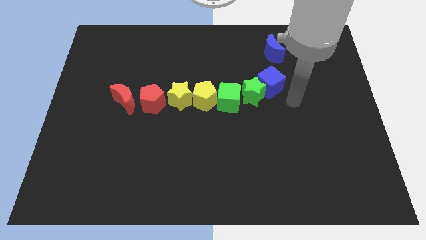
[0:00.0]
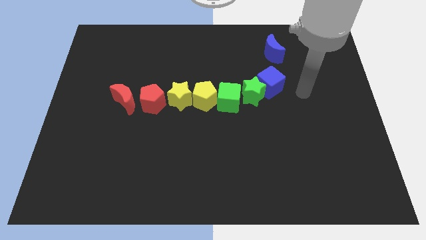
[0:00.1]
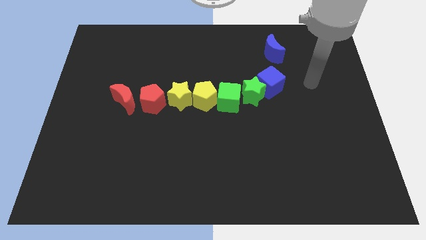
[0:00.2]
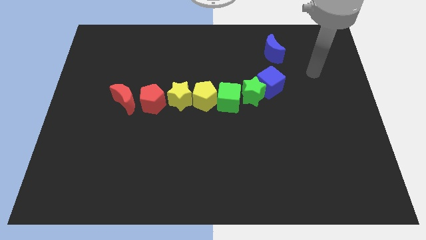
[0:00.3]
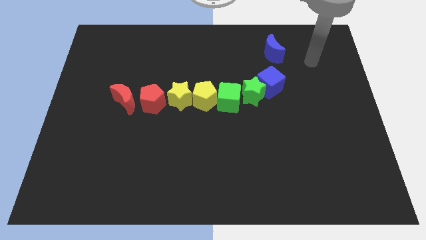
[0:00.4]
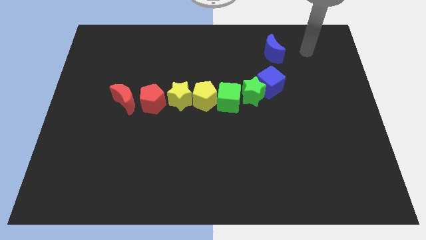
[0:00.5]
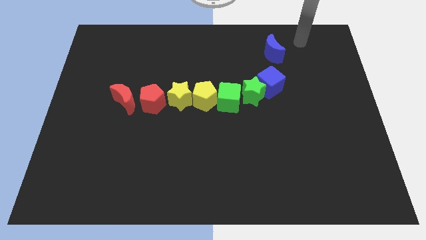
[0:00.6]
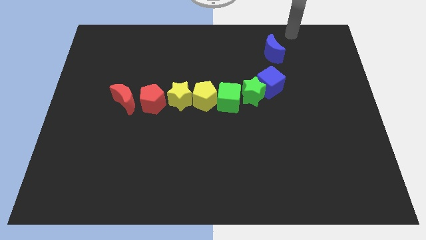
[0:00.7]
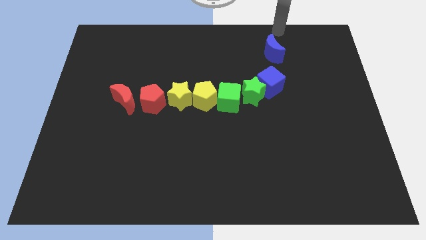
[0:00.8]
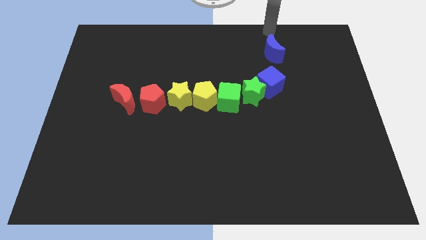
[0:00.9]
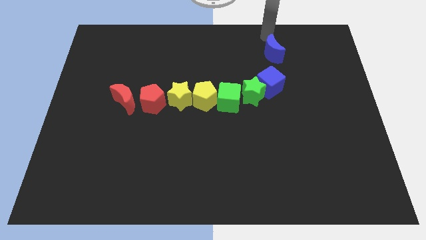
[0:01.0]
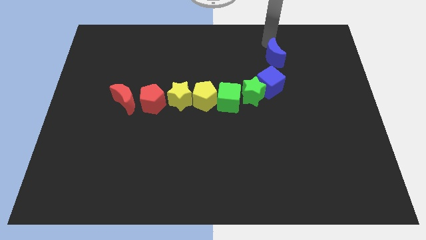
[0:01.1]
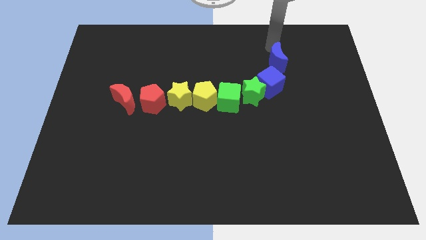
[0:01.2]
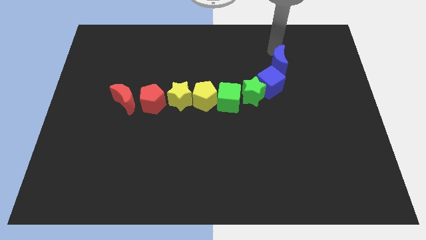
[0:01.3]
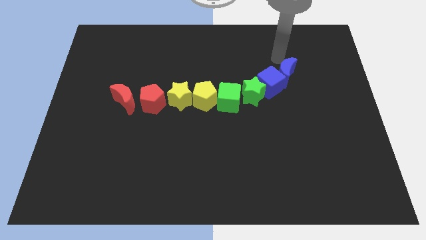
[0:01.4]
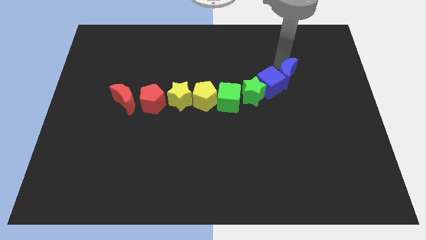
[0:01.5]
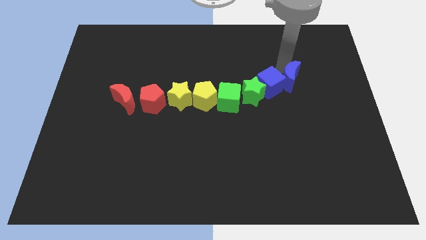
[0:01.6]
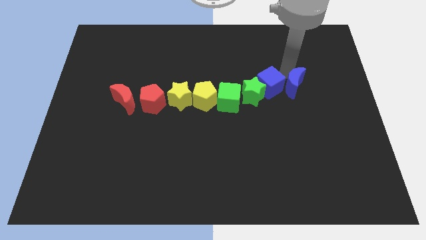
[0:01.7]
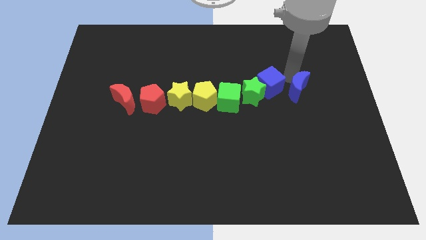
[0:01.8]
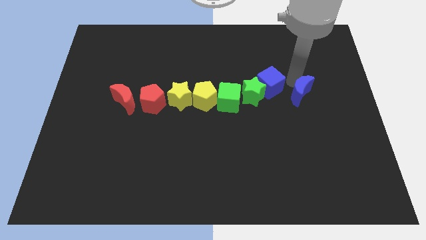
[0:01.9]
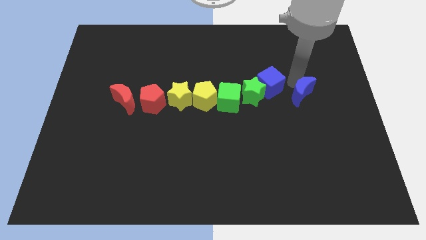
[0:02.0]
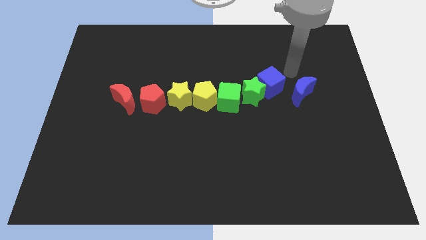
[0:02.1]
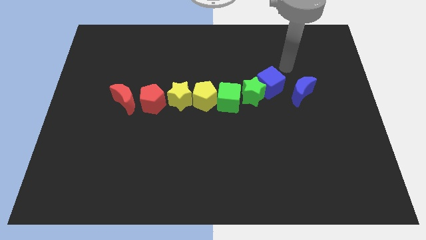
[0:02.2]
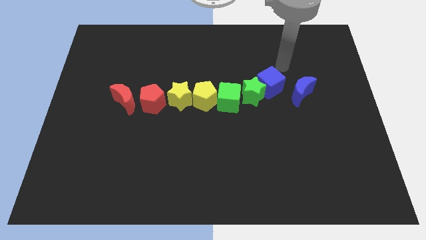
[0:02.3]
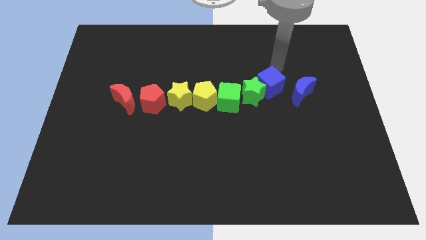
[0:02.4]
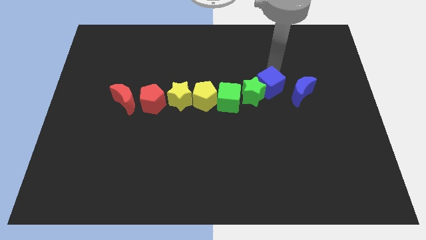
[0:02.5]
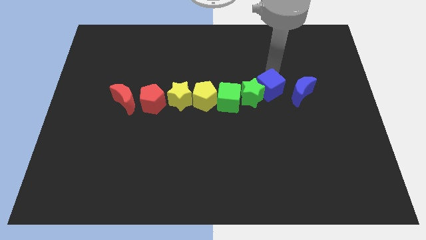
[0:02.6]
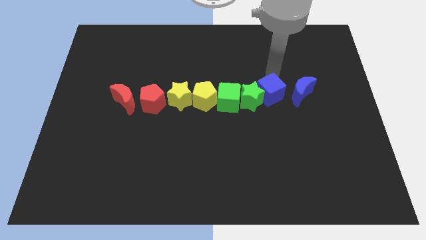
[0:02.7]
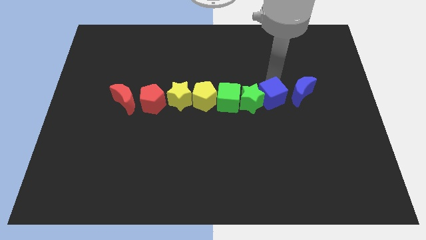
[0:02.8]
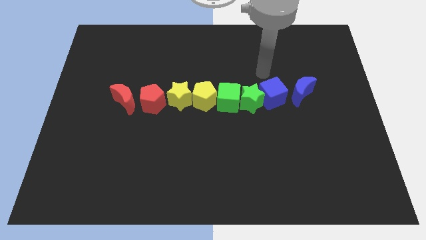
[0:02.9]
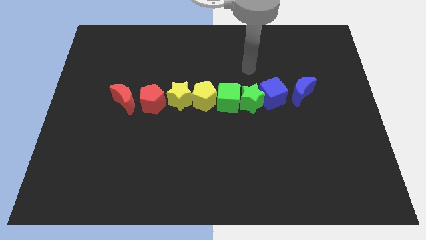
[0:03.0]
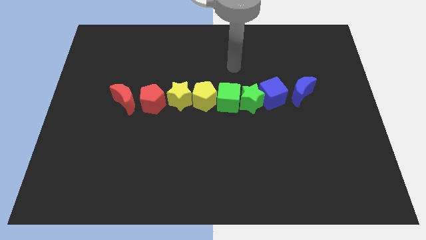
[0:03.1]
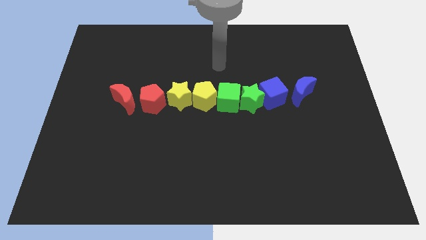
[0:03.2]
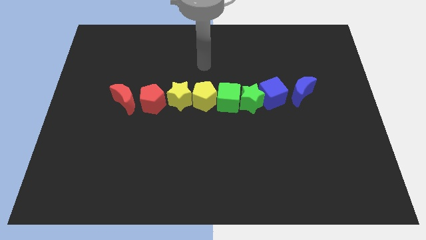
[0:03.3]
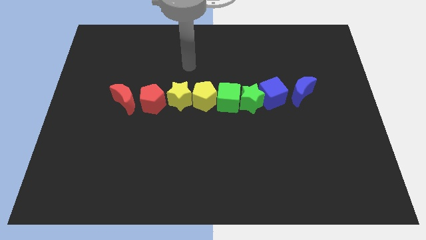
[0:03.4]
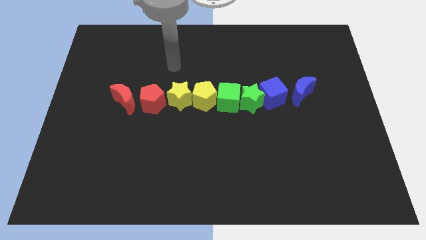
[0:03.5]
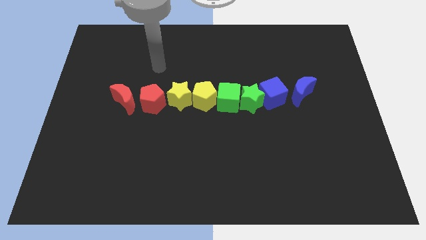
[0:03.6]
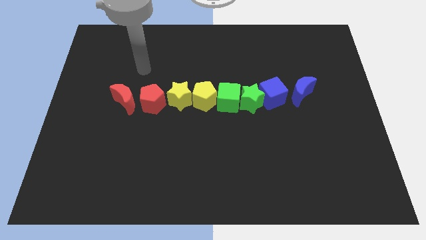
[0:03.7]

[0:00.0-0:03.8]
move the blue crescent to the right of the blue cube

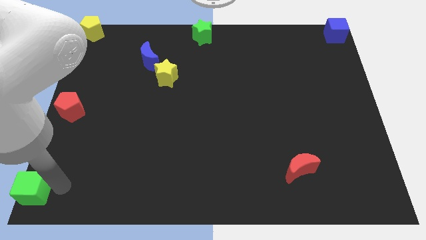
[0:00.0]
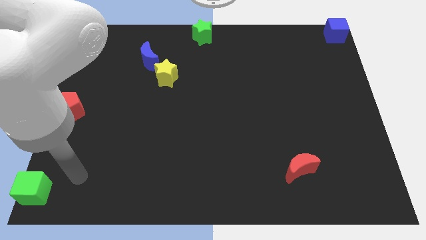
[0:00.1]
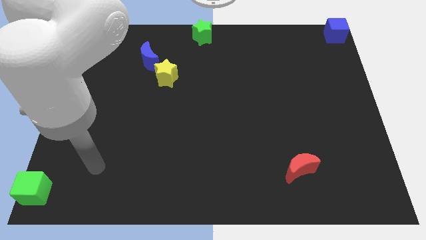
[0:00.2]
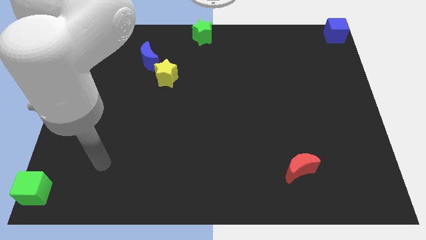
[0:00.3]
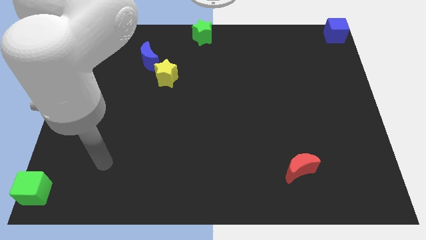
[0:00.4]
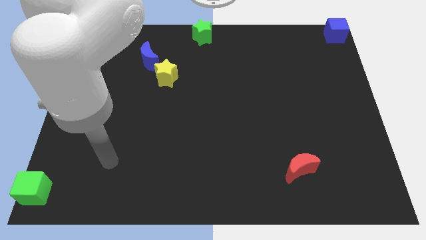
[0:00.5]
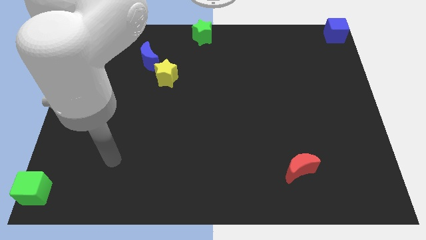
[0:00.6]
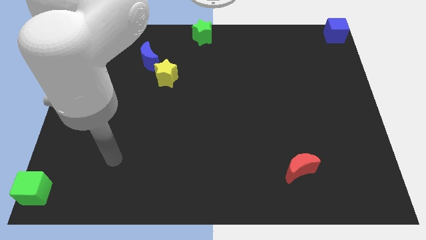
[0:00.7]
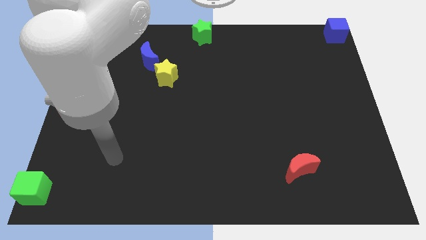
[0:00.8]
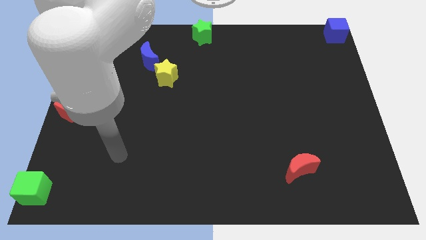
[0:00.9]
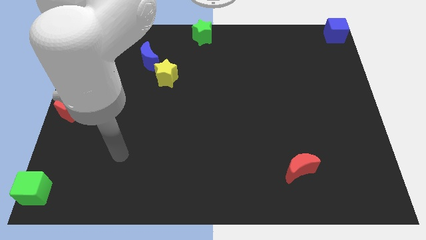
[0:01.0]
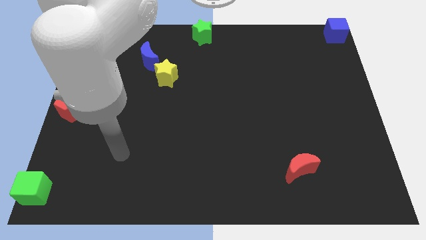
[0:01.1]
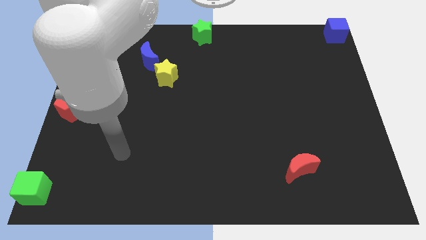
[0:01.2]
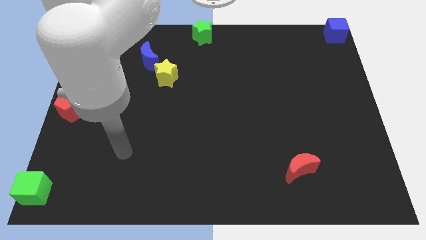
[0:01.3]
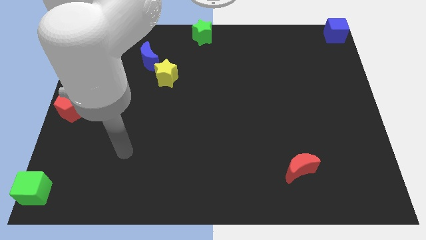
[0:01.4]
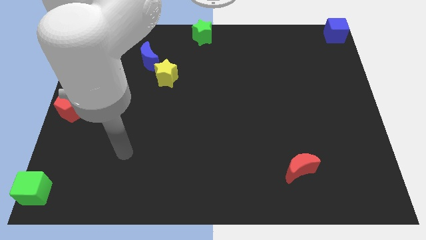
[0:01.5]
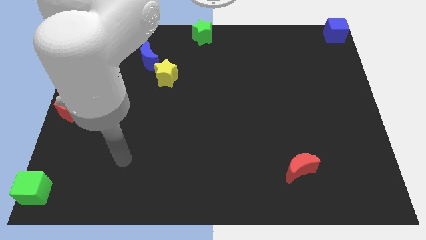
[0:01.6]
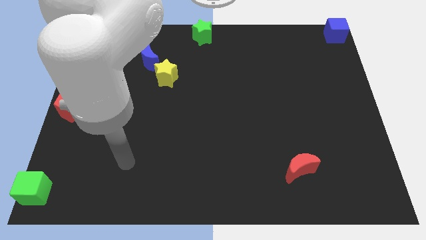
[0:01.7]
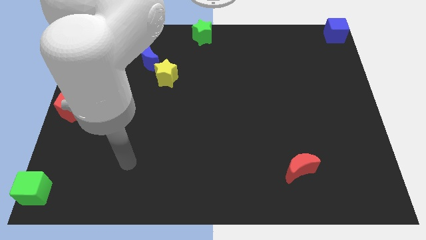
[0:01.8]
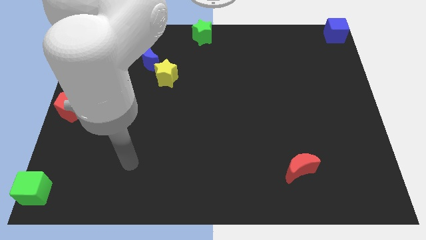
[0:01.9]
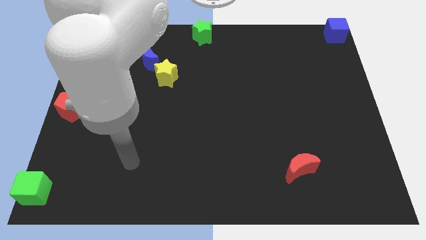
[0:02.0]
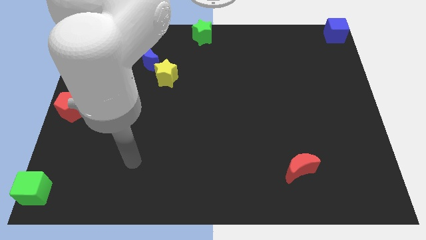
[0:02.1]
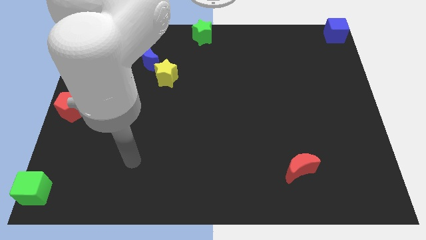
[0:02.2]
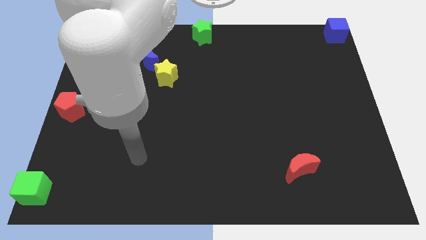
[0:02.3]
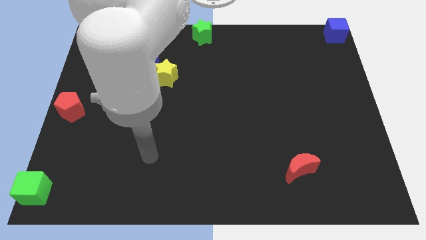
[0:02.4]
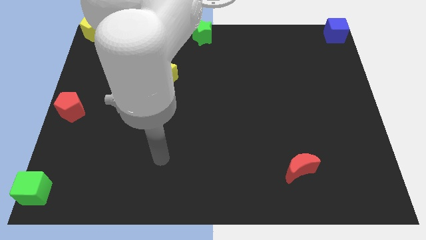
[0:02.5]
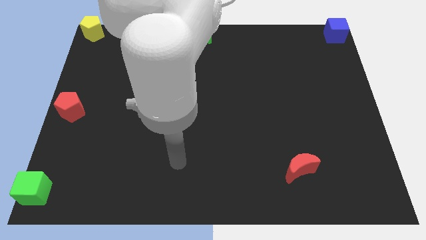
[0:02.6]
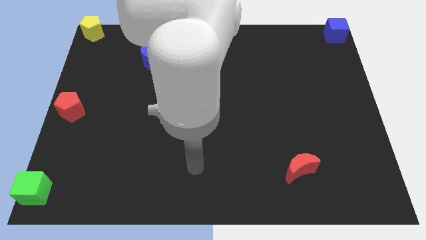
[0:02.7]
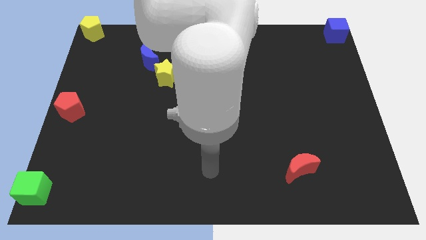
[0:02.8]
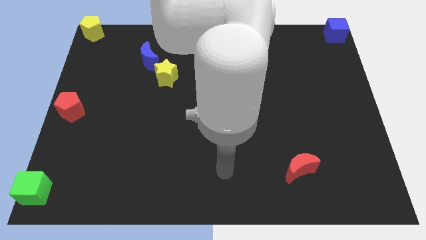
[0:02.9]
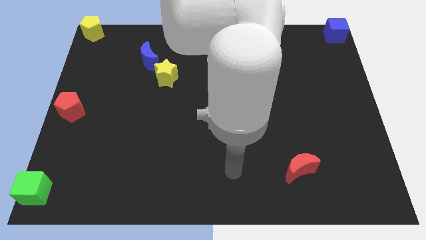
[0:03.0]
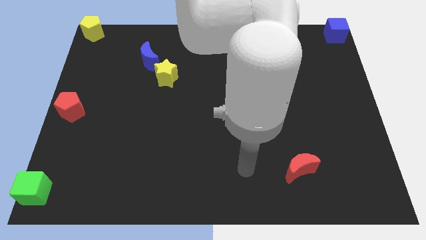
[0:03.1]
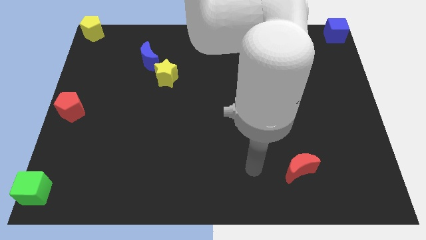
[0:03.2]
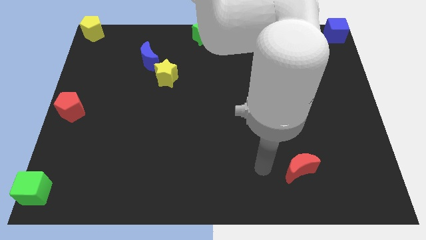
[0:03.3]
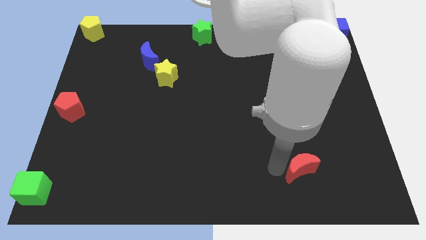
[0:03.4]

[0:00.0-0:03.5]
point your arm at the left of the red crescent

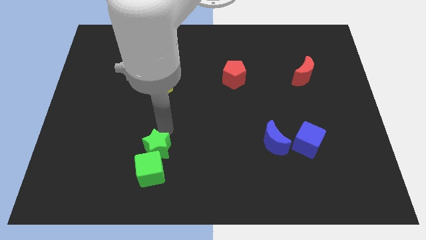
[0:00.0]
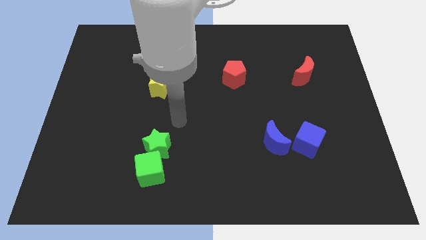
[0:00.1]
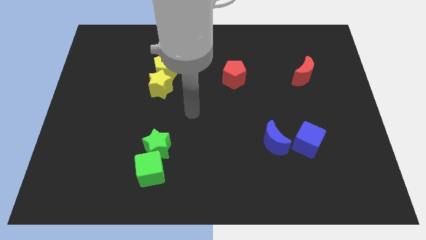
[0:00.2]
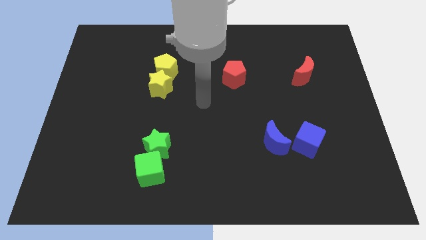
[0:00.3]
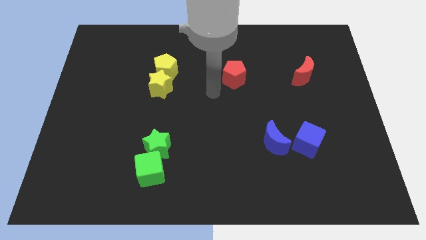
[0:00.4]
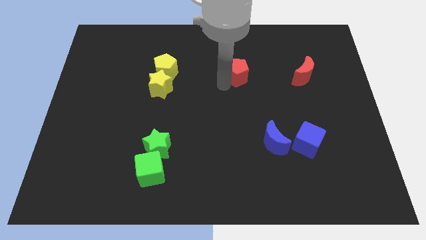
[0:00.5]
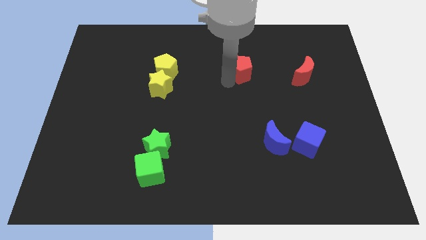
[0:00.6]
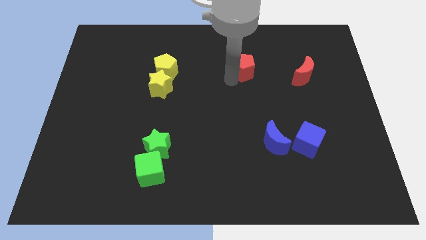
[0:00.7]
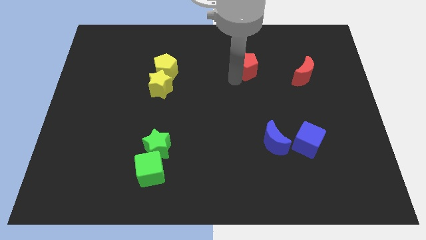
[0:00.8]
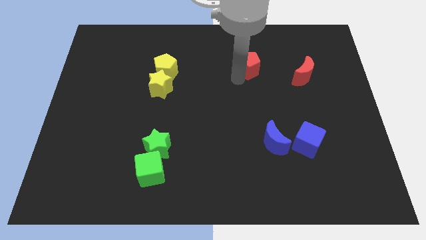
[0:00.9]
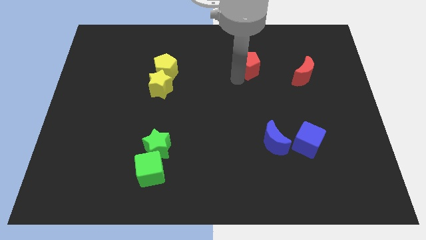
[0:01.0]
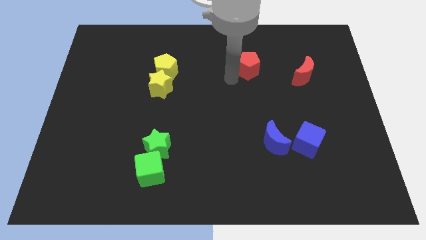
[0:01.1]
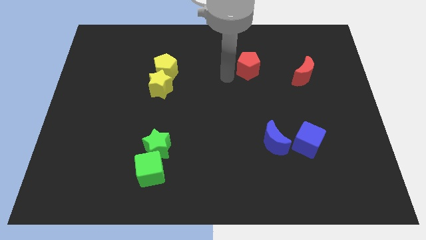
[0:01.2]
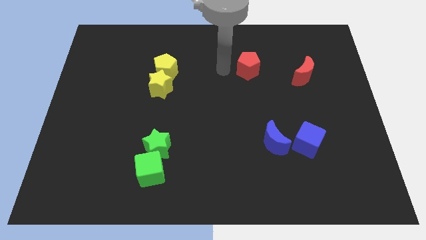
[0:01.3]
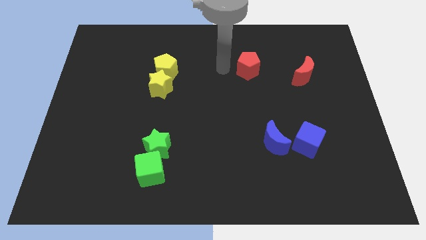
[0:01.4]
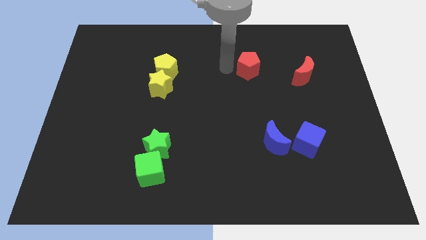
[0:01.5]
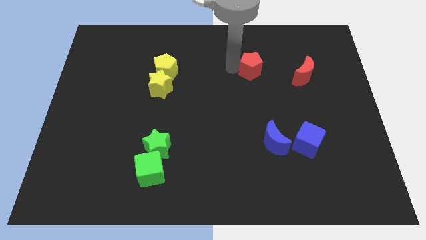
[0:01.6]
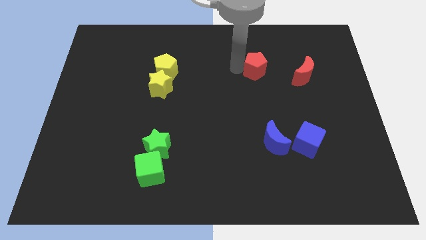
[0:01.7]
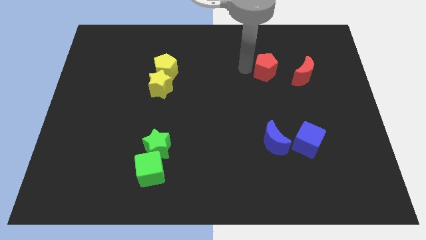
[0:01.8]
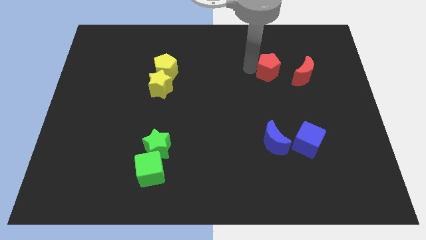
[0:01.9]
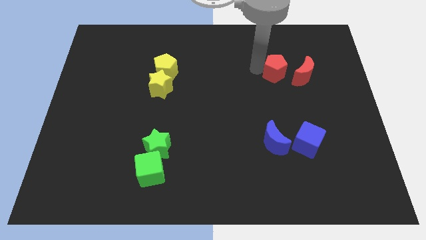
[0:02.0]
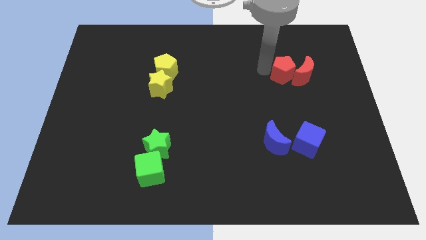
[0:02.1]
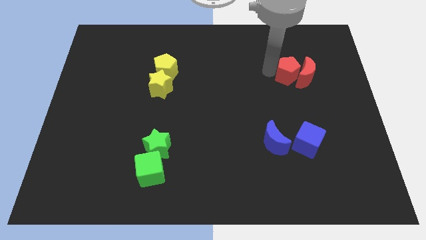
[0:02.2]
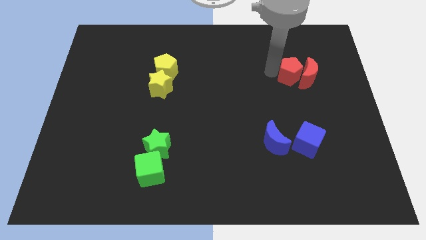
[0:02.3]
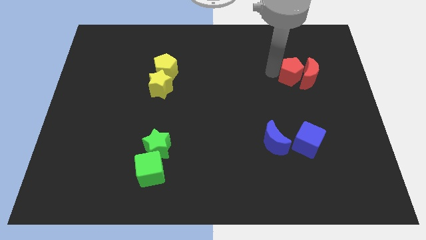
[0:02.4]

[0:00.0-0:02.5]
push red pentagon towards red crescent
